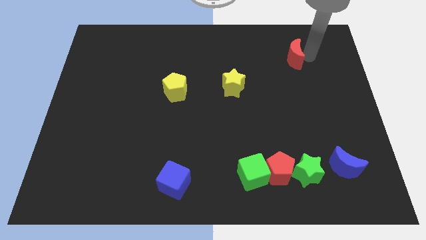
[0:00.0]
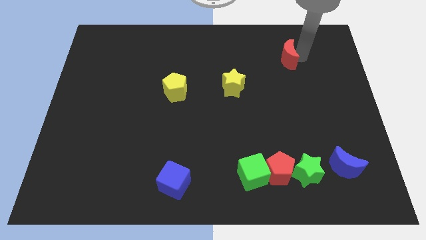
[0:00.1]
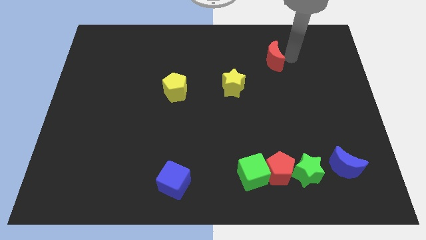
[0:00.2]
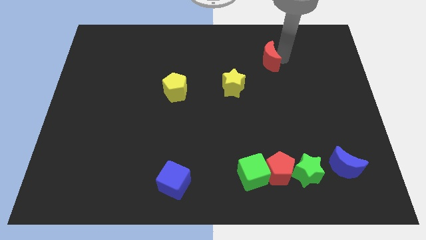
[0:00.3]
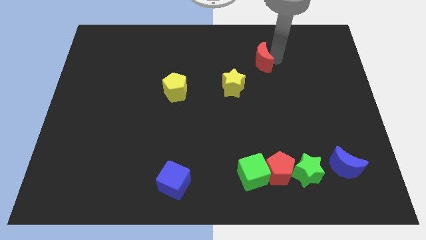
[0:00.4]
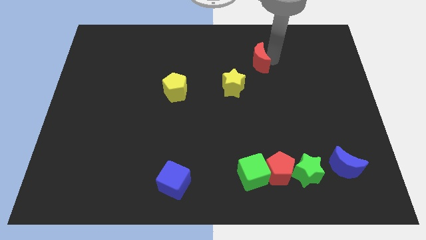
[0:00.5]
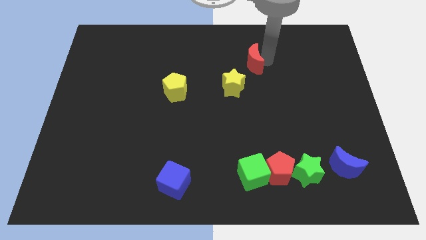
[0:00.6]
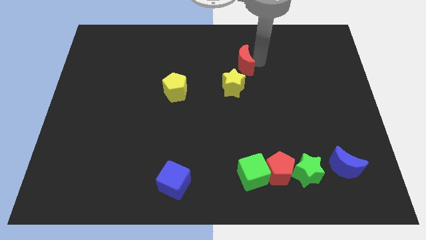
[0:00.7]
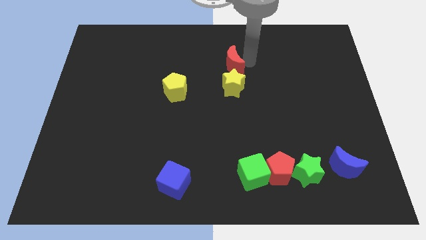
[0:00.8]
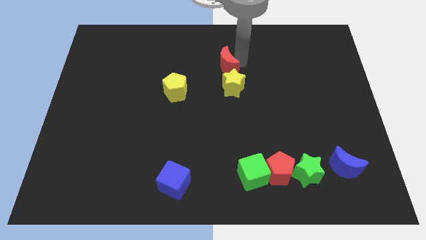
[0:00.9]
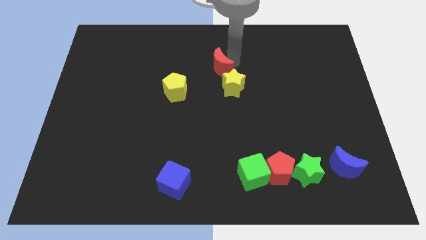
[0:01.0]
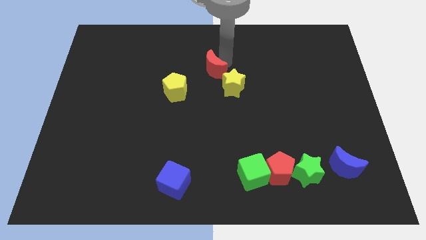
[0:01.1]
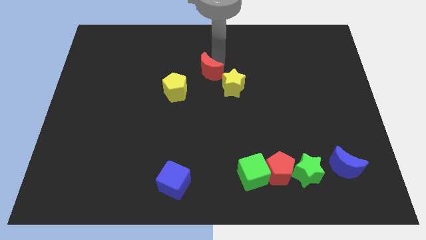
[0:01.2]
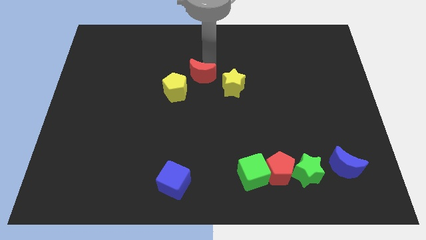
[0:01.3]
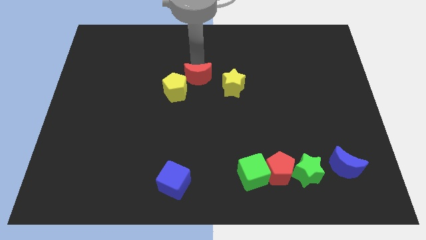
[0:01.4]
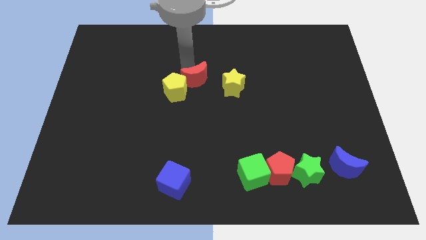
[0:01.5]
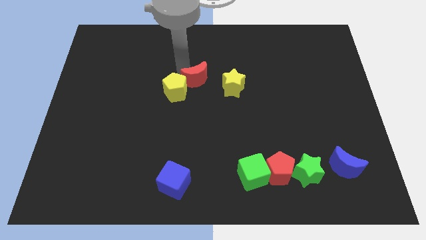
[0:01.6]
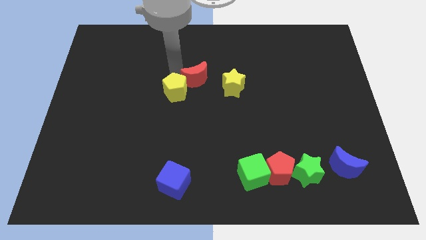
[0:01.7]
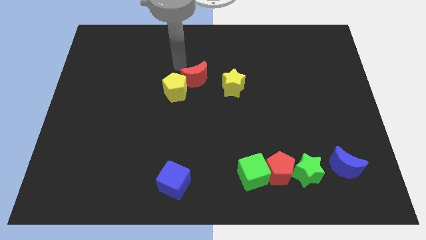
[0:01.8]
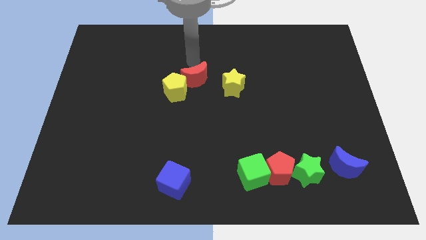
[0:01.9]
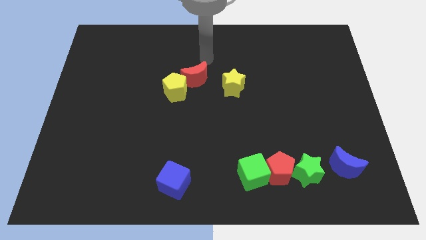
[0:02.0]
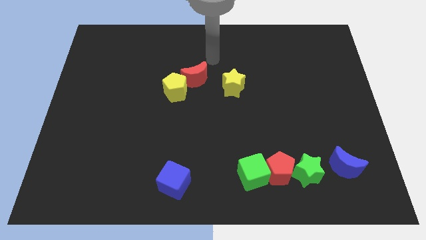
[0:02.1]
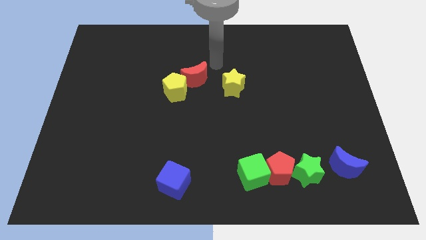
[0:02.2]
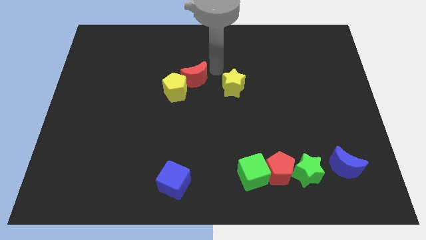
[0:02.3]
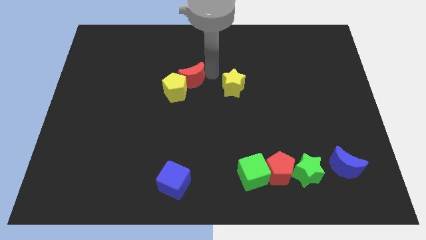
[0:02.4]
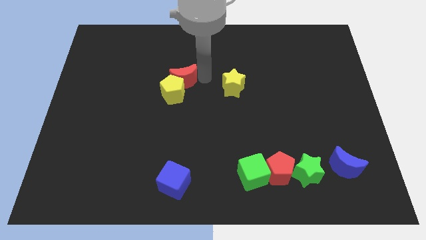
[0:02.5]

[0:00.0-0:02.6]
place the red crescent at the top right side of the yellow pentagon

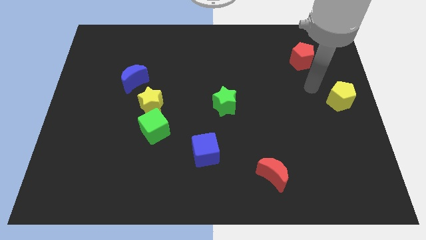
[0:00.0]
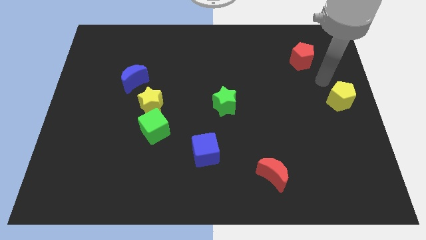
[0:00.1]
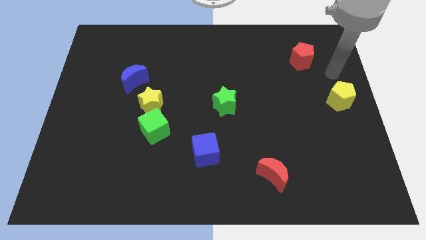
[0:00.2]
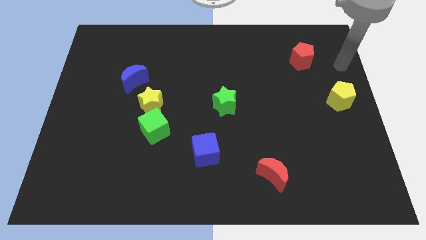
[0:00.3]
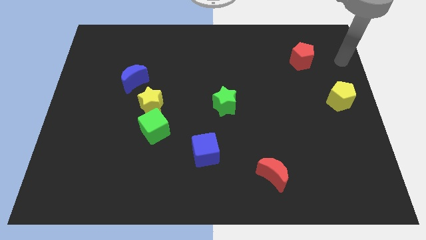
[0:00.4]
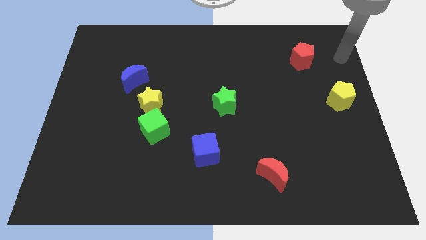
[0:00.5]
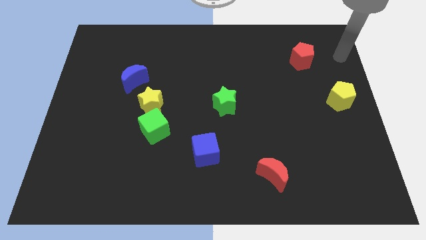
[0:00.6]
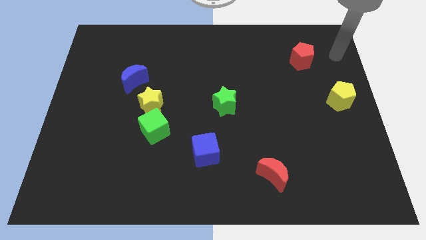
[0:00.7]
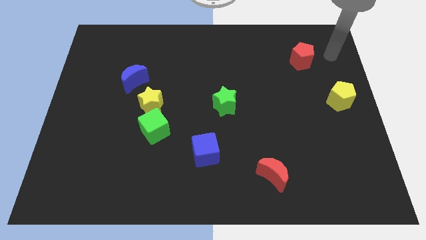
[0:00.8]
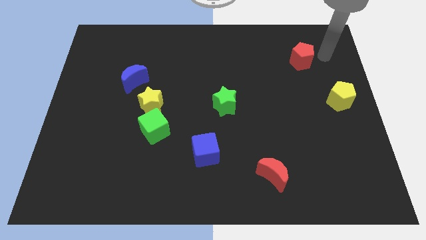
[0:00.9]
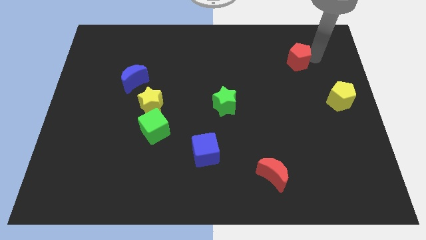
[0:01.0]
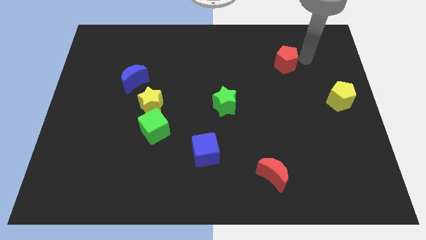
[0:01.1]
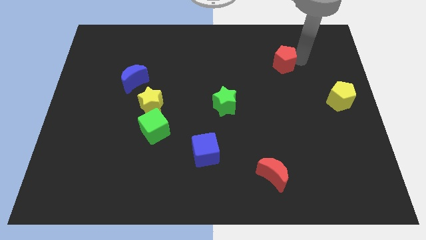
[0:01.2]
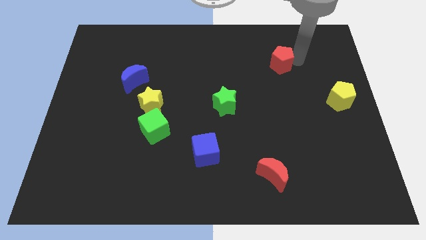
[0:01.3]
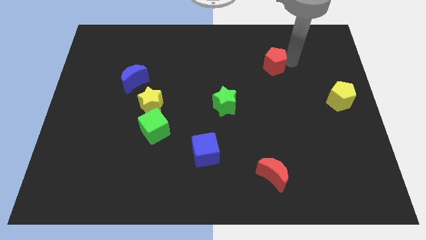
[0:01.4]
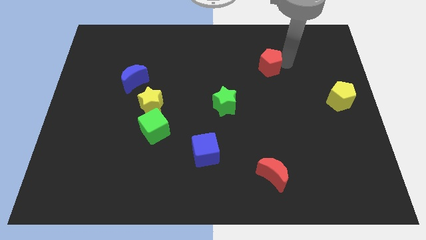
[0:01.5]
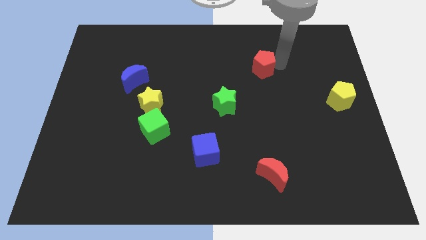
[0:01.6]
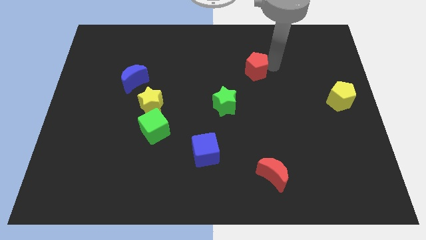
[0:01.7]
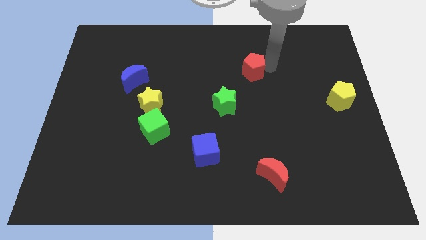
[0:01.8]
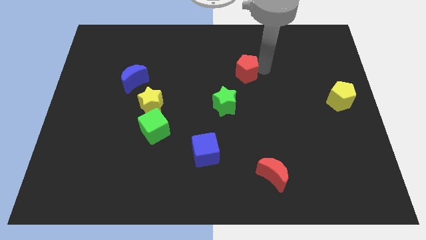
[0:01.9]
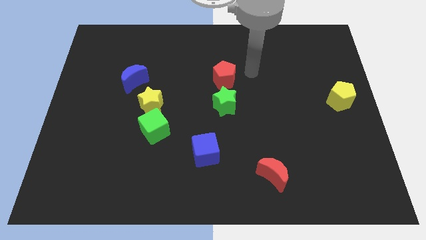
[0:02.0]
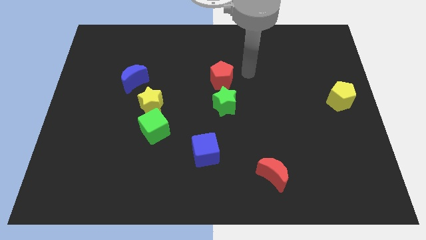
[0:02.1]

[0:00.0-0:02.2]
slide the red pentagon on top of green star

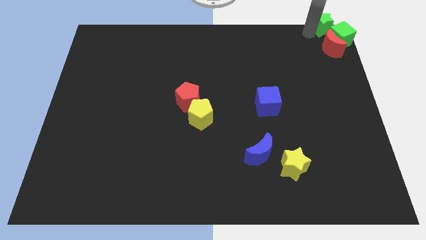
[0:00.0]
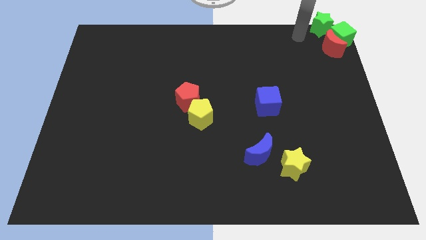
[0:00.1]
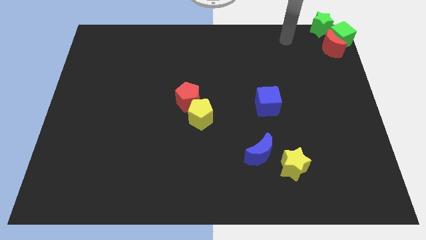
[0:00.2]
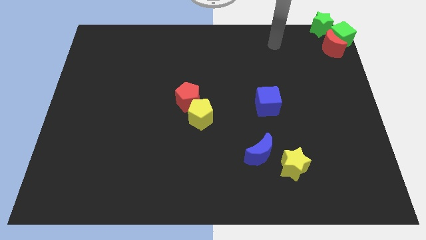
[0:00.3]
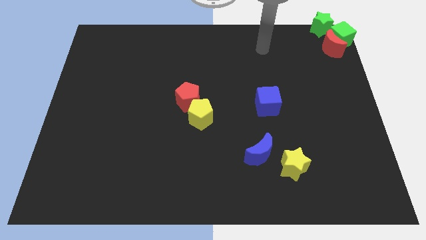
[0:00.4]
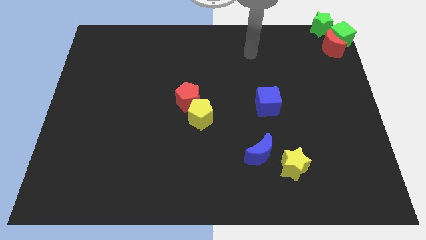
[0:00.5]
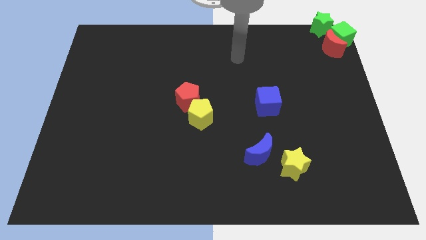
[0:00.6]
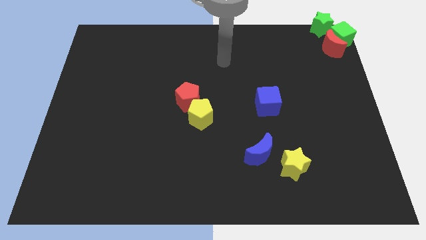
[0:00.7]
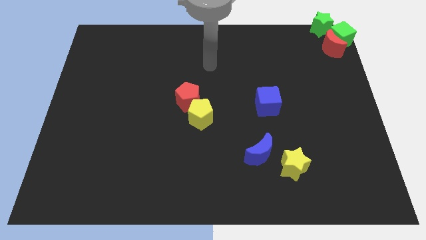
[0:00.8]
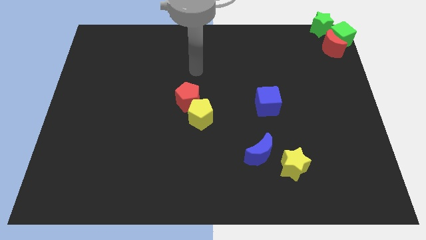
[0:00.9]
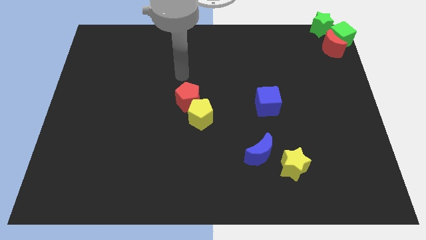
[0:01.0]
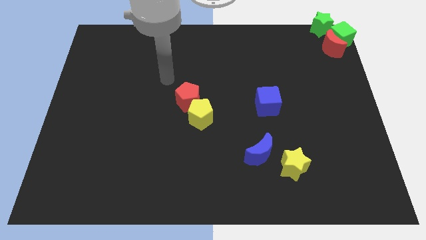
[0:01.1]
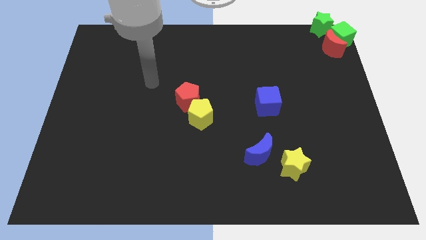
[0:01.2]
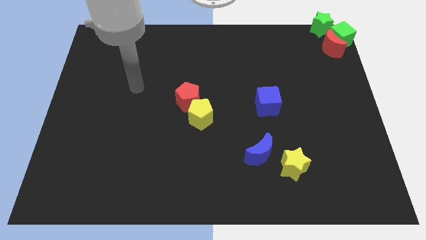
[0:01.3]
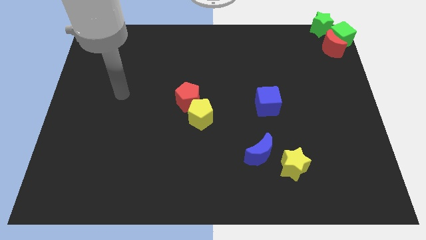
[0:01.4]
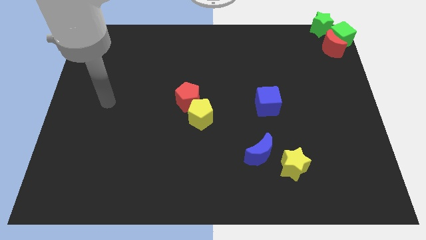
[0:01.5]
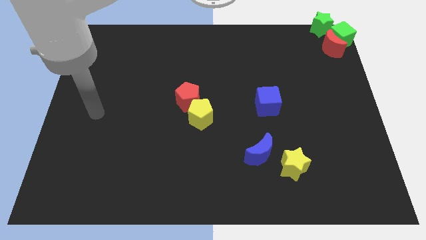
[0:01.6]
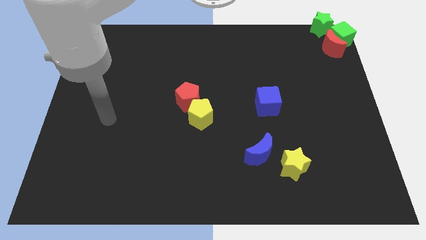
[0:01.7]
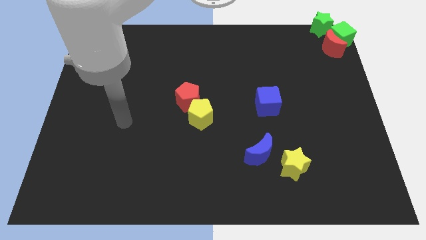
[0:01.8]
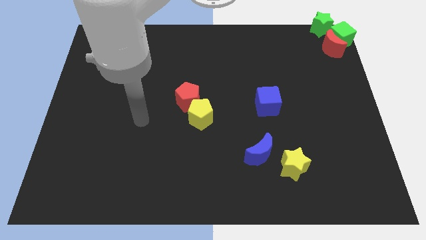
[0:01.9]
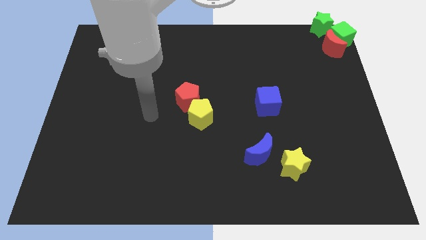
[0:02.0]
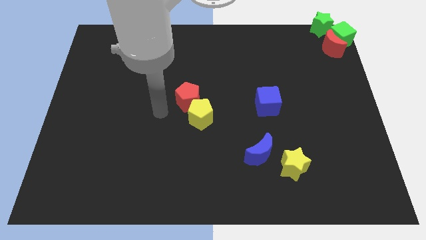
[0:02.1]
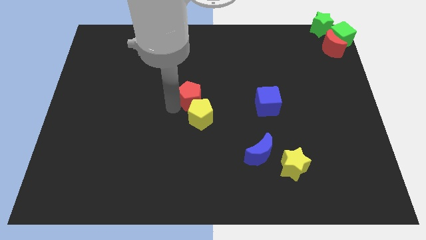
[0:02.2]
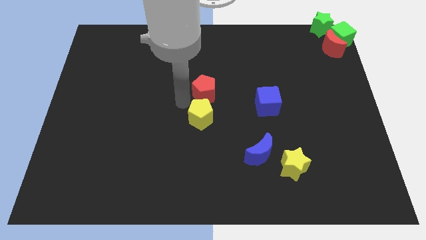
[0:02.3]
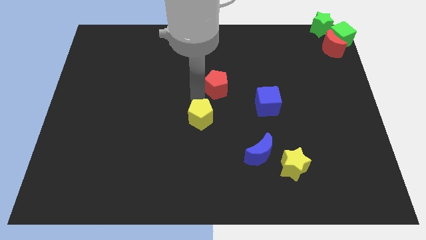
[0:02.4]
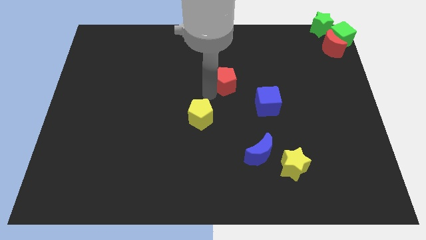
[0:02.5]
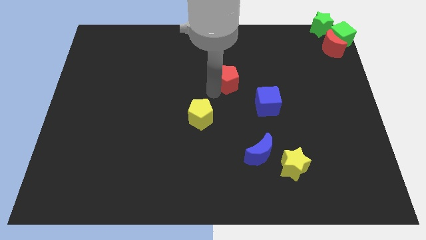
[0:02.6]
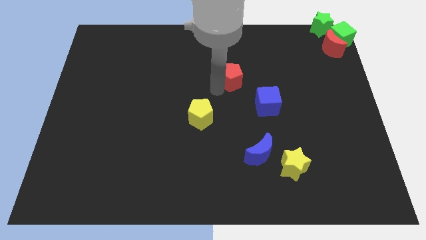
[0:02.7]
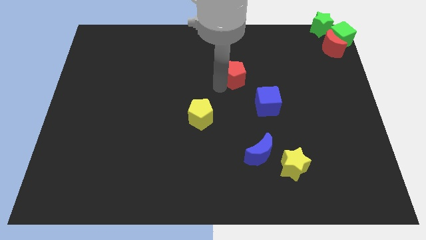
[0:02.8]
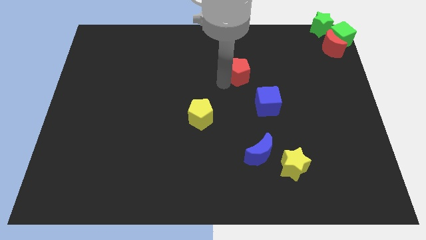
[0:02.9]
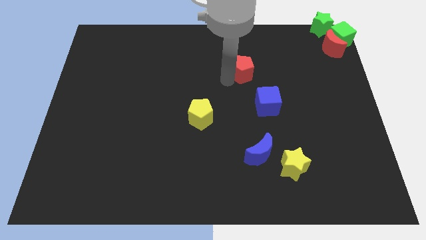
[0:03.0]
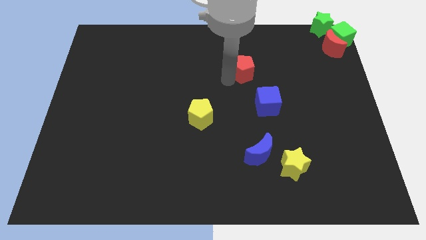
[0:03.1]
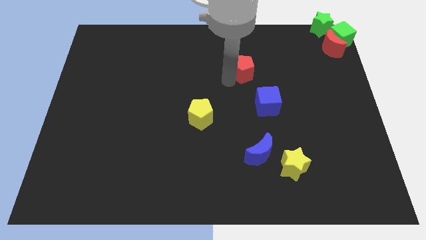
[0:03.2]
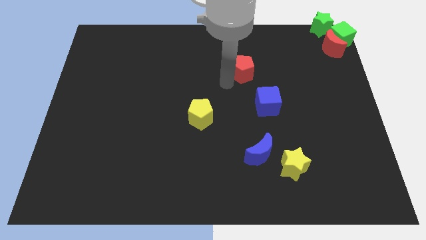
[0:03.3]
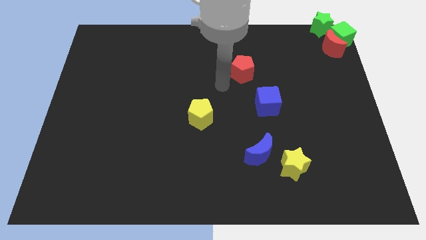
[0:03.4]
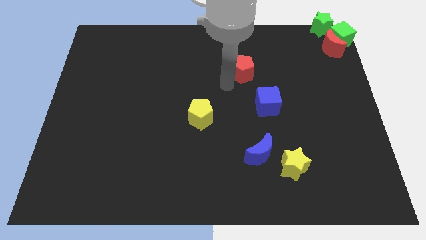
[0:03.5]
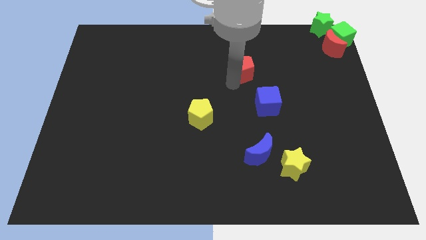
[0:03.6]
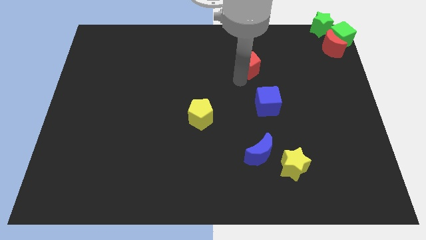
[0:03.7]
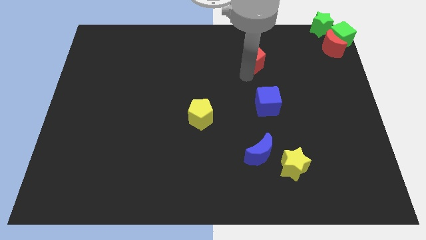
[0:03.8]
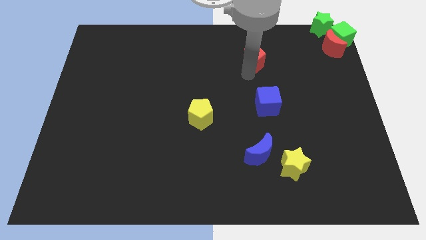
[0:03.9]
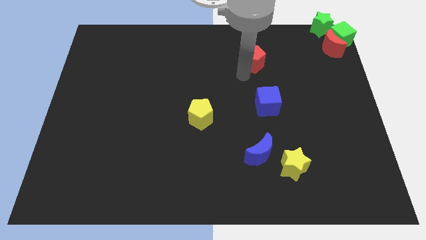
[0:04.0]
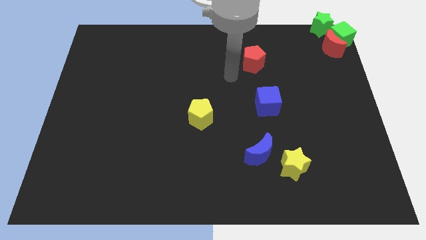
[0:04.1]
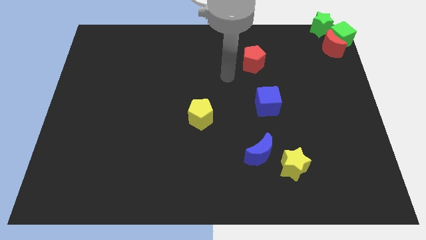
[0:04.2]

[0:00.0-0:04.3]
place the red pentagon at the top side of the blue cube
